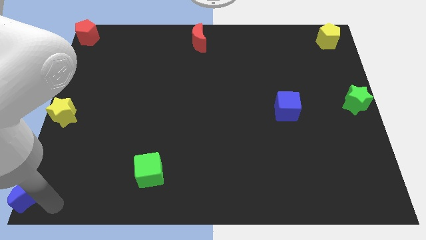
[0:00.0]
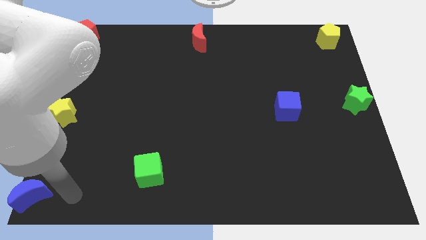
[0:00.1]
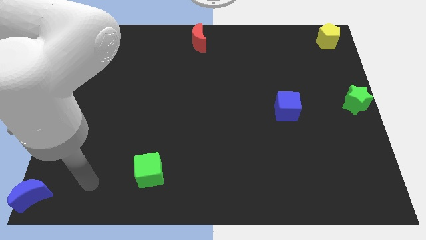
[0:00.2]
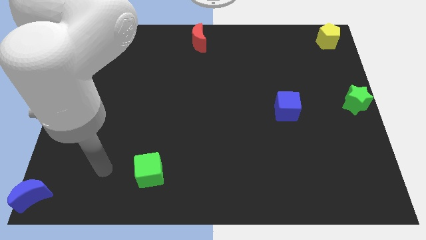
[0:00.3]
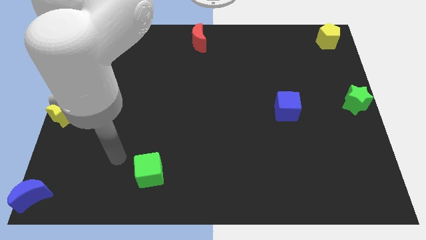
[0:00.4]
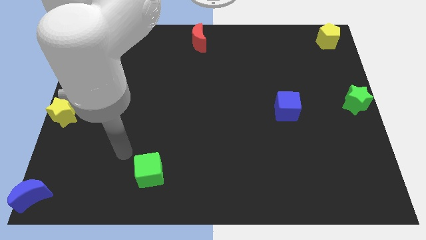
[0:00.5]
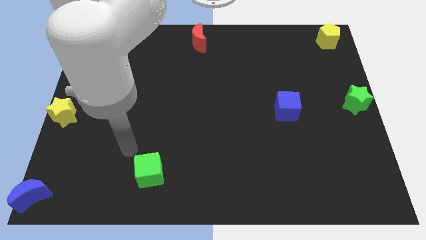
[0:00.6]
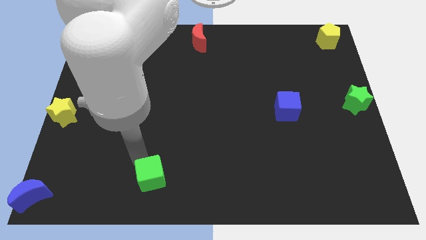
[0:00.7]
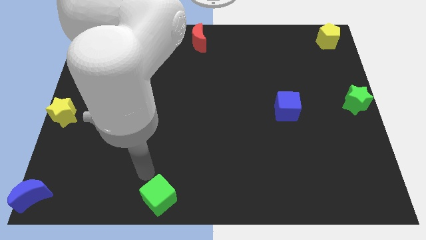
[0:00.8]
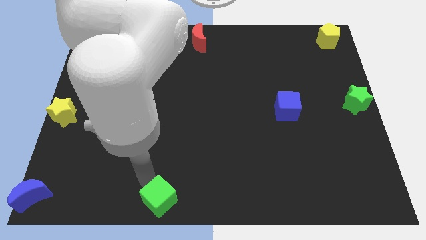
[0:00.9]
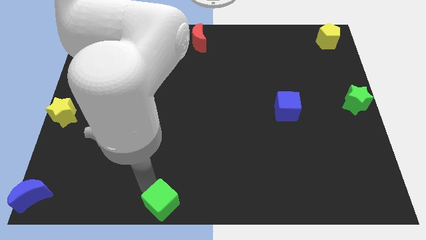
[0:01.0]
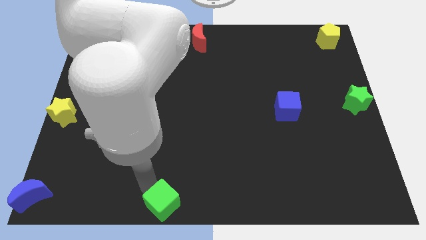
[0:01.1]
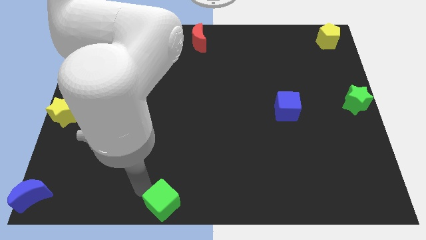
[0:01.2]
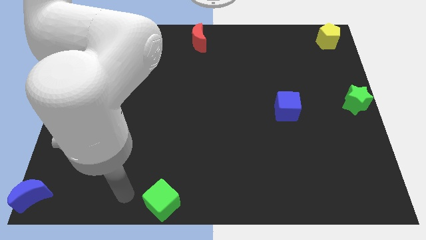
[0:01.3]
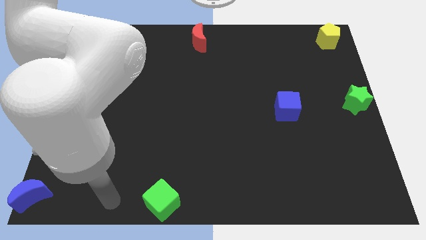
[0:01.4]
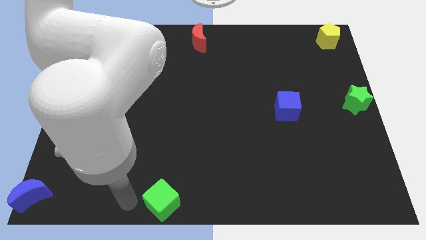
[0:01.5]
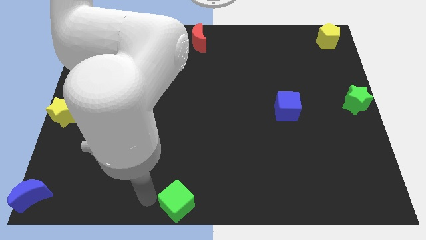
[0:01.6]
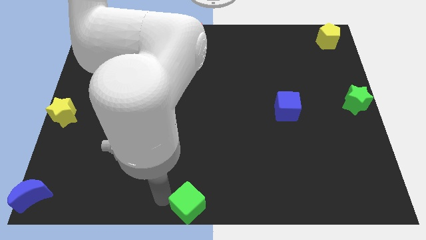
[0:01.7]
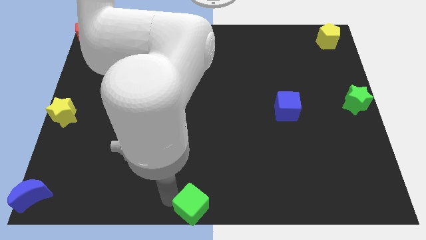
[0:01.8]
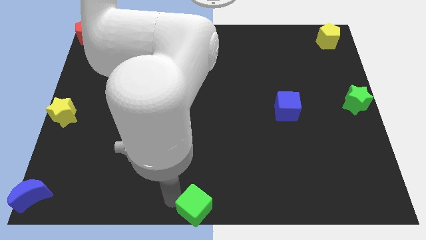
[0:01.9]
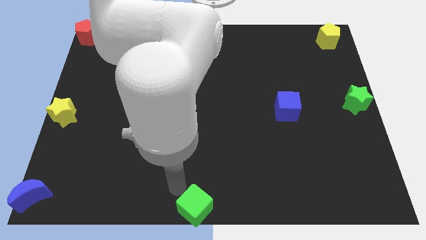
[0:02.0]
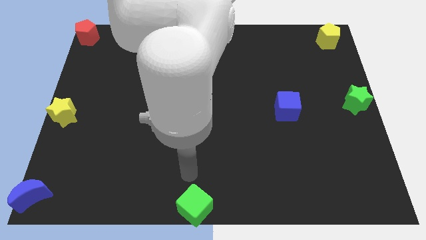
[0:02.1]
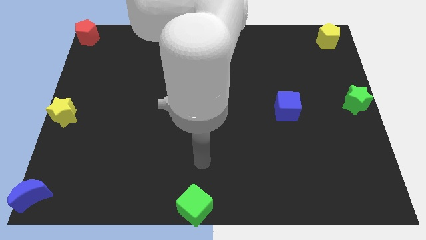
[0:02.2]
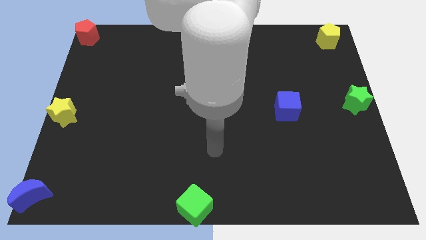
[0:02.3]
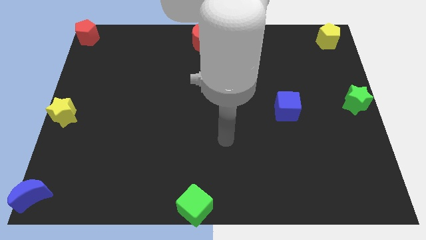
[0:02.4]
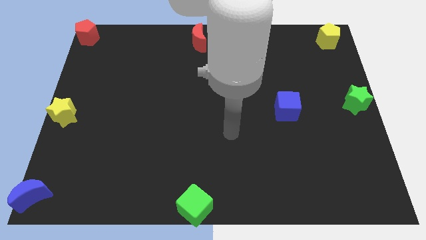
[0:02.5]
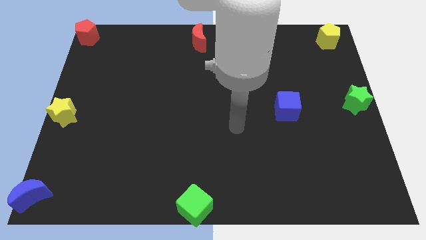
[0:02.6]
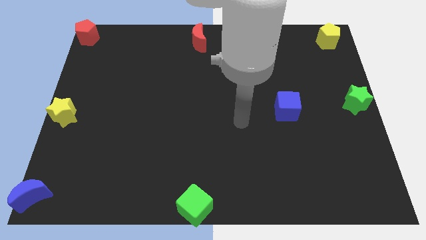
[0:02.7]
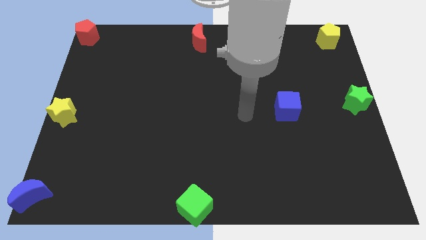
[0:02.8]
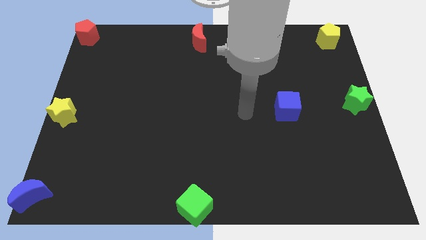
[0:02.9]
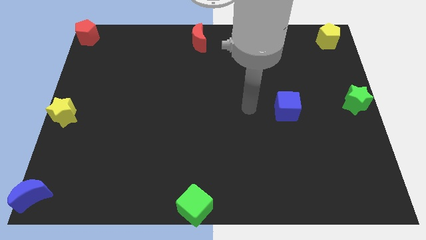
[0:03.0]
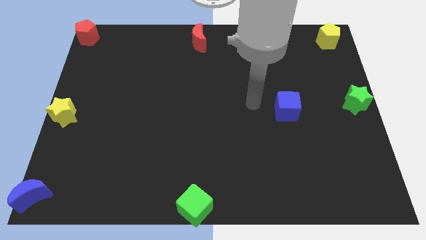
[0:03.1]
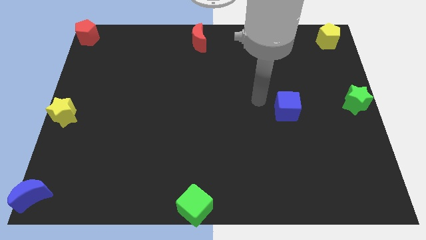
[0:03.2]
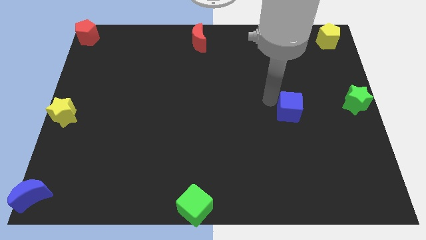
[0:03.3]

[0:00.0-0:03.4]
place the green cube at the bottom center of the board

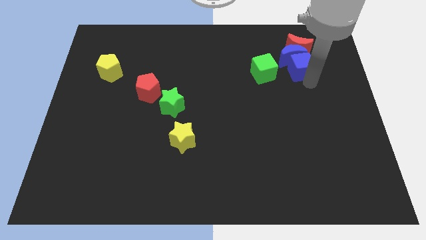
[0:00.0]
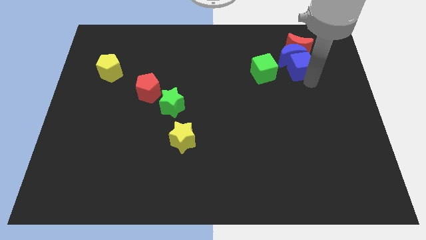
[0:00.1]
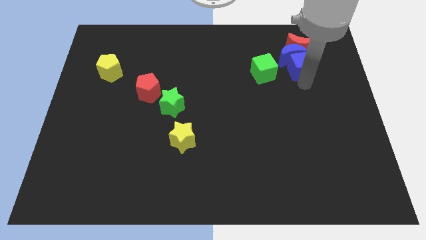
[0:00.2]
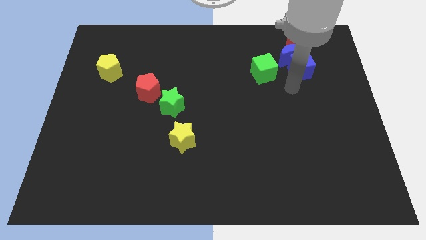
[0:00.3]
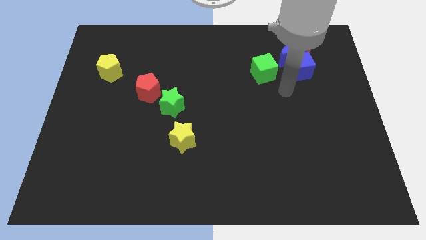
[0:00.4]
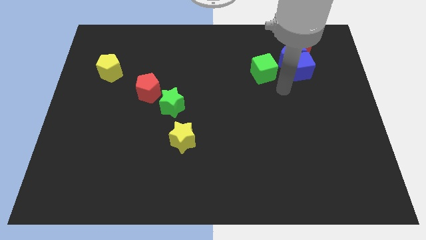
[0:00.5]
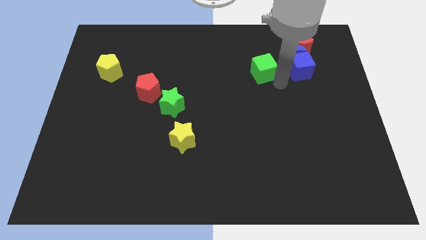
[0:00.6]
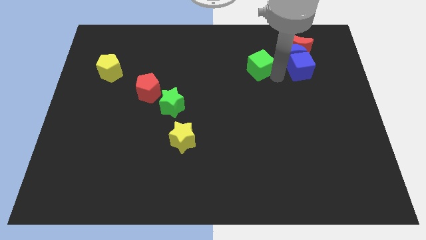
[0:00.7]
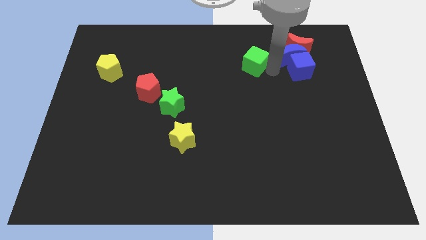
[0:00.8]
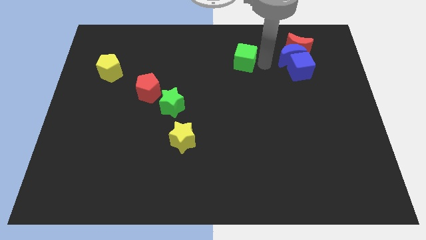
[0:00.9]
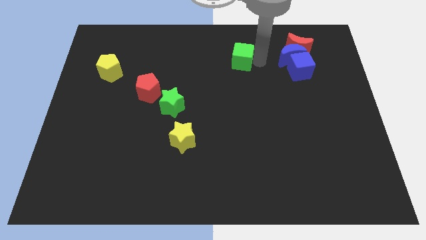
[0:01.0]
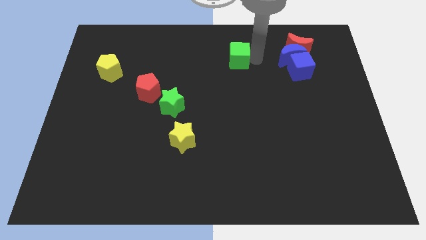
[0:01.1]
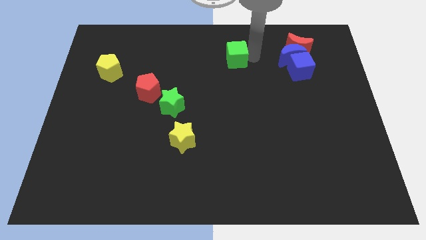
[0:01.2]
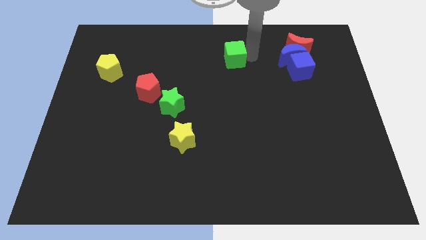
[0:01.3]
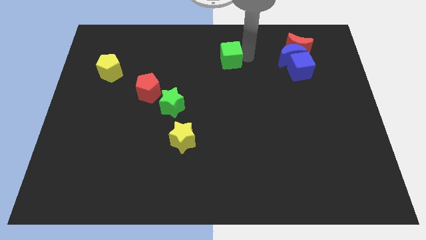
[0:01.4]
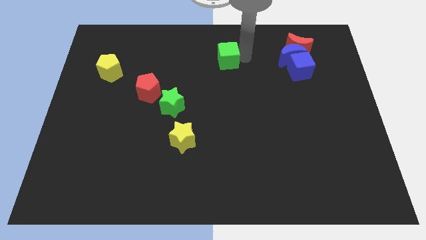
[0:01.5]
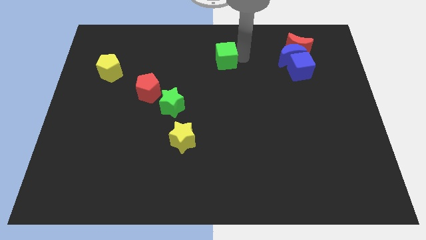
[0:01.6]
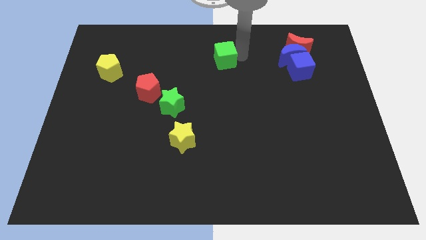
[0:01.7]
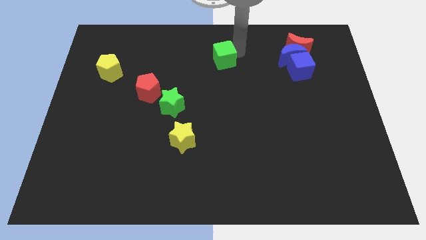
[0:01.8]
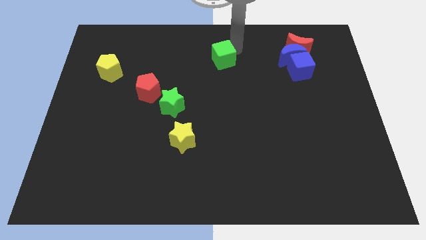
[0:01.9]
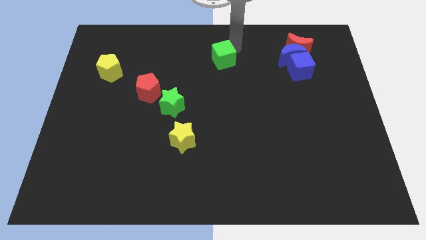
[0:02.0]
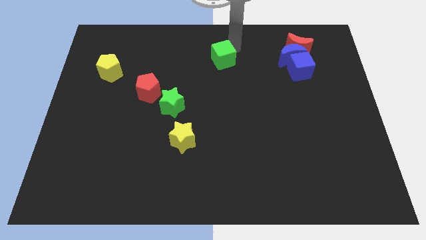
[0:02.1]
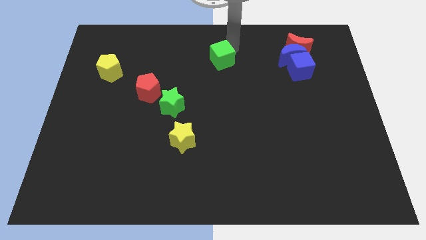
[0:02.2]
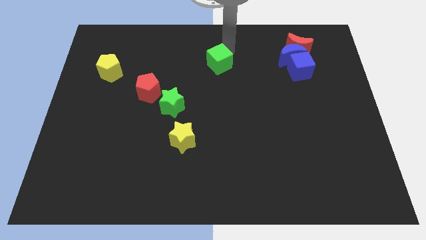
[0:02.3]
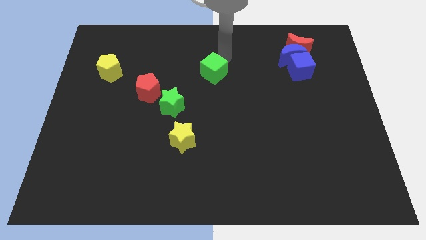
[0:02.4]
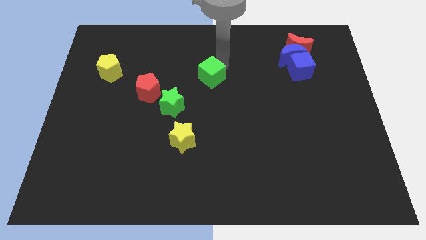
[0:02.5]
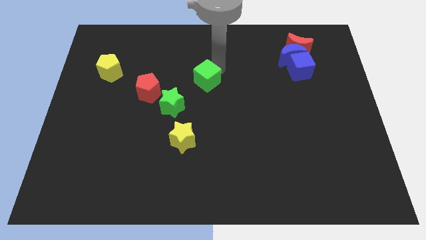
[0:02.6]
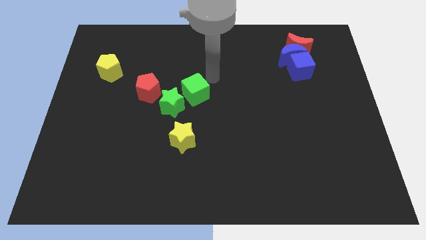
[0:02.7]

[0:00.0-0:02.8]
push the green cube towards the green star

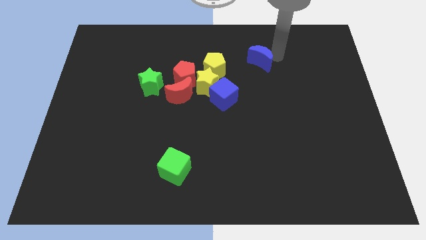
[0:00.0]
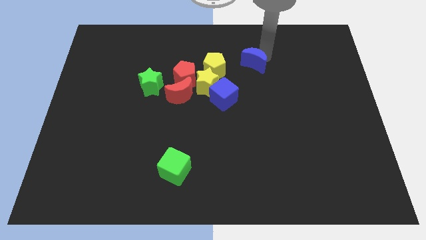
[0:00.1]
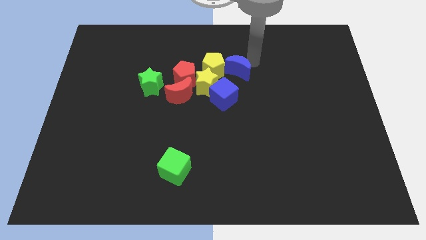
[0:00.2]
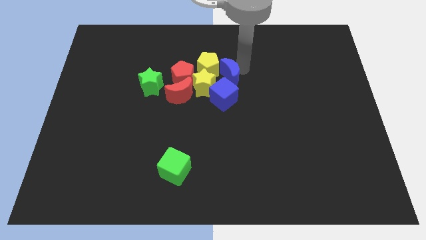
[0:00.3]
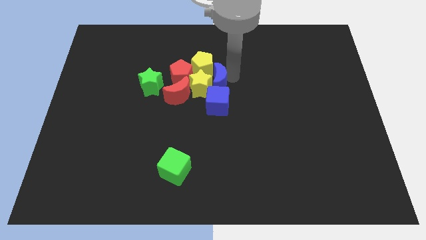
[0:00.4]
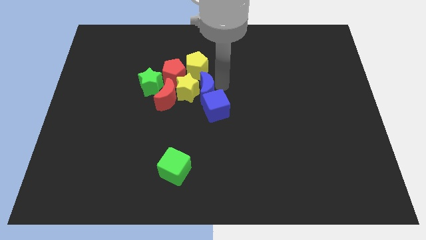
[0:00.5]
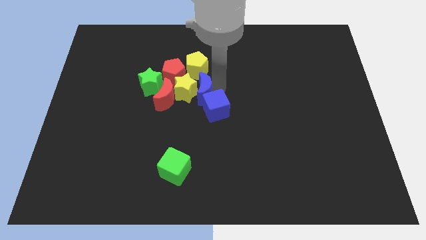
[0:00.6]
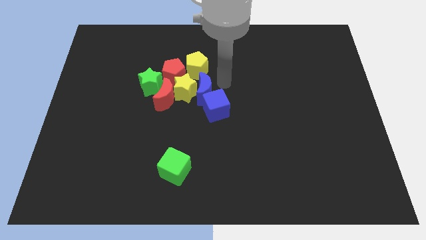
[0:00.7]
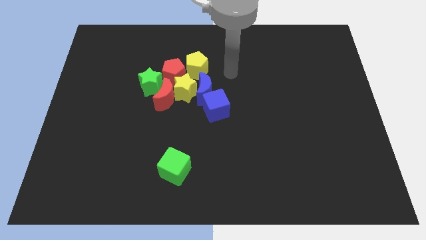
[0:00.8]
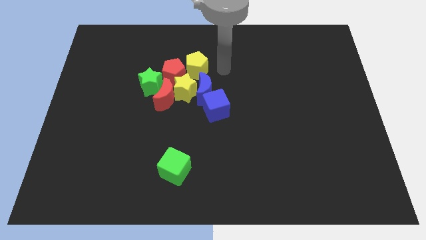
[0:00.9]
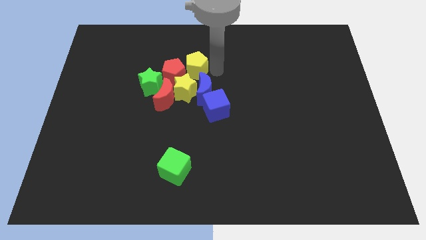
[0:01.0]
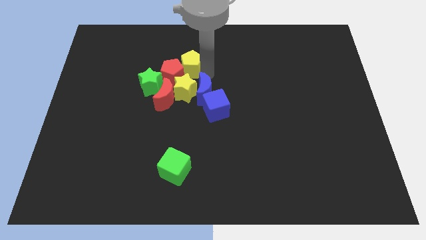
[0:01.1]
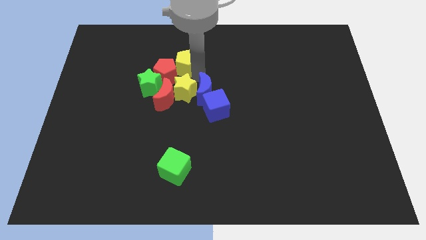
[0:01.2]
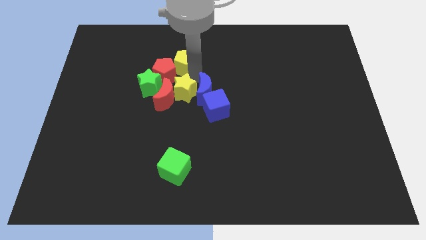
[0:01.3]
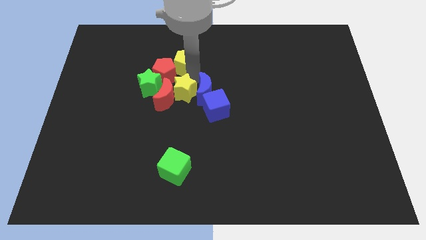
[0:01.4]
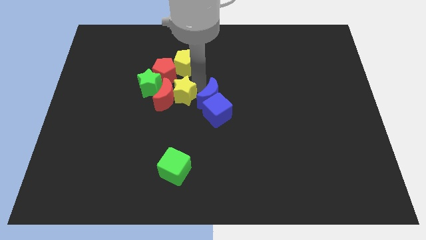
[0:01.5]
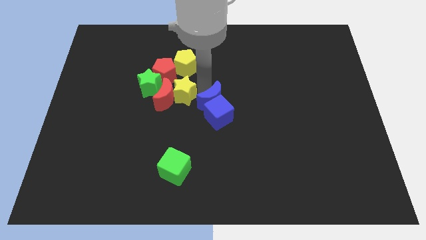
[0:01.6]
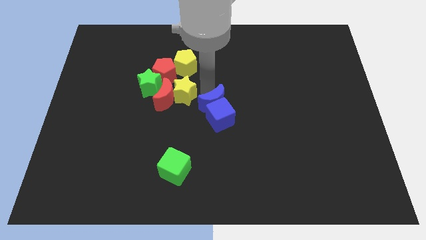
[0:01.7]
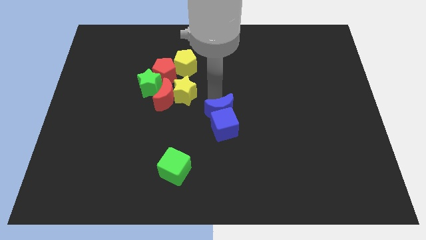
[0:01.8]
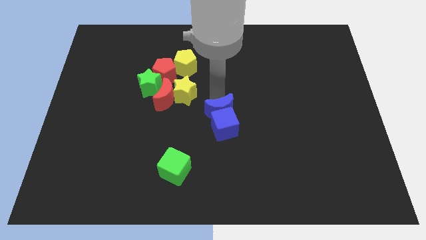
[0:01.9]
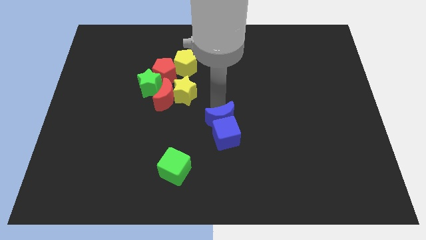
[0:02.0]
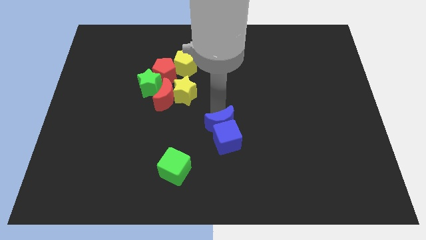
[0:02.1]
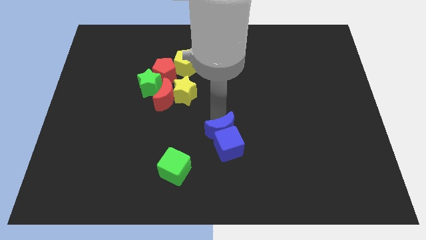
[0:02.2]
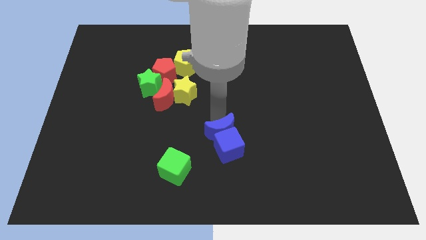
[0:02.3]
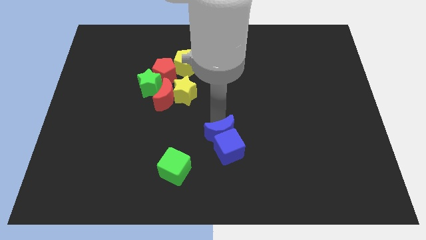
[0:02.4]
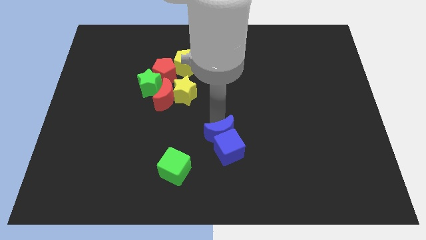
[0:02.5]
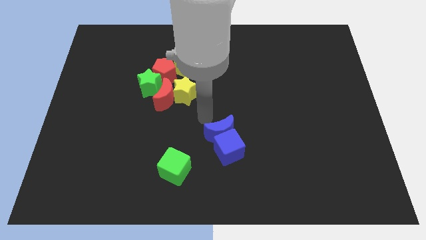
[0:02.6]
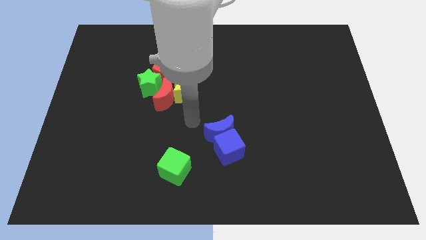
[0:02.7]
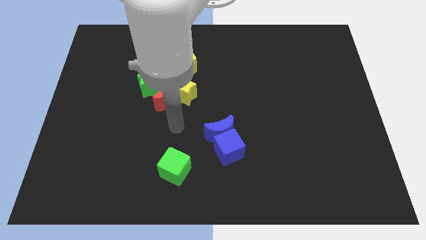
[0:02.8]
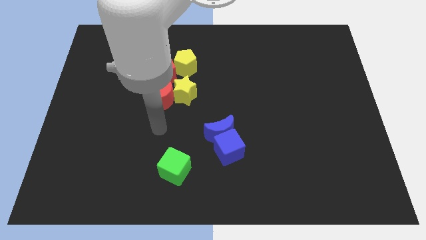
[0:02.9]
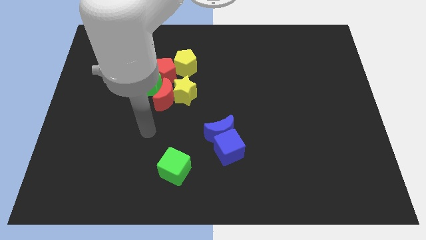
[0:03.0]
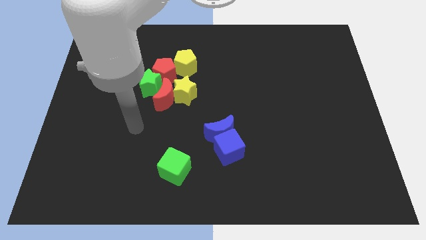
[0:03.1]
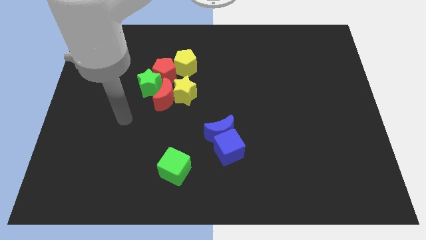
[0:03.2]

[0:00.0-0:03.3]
push both the blue blocks diagonally on the top right side of the green cube
